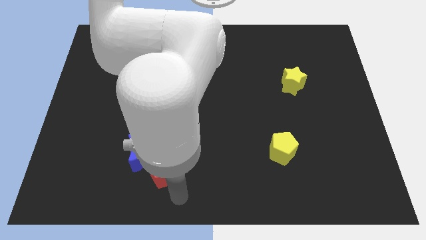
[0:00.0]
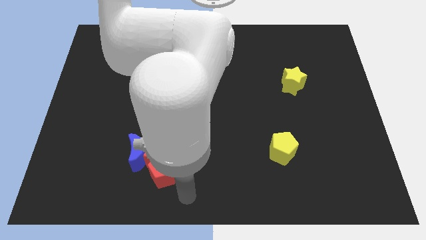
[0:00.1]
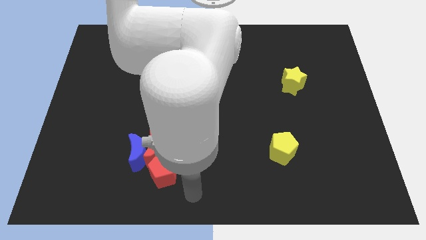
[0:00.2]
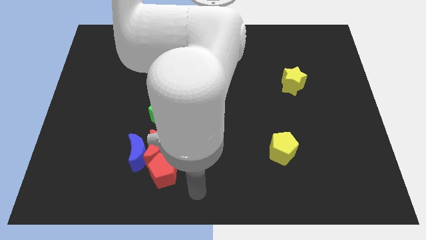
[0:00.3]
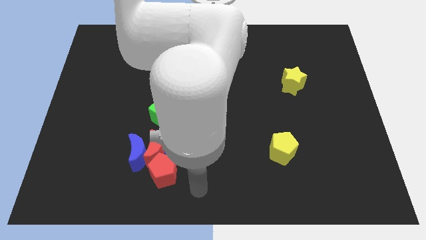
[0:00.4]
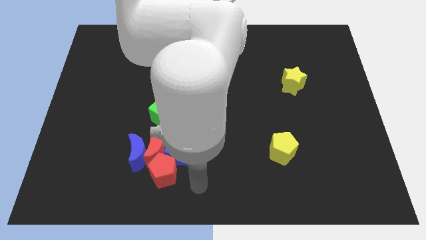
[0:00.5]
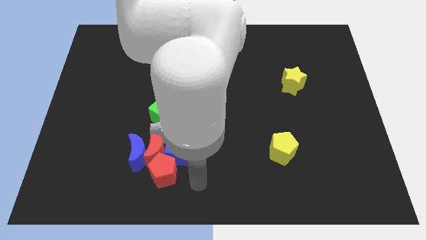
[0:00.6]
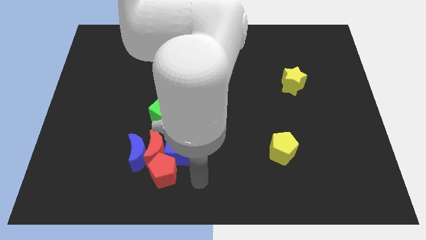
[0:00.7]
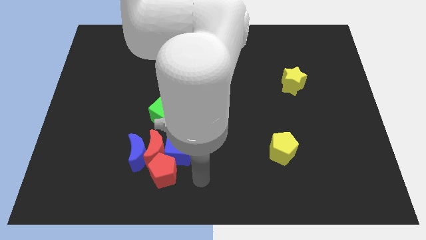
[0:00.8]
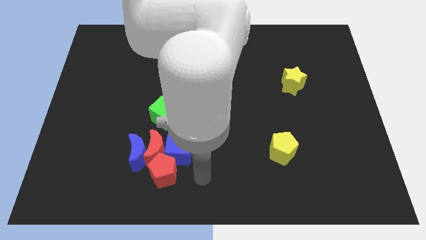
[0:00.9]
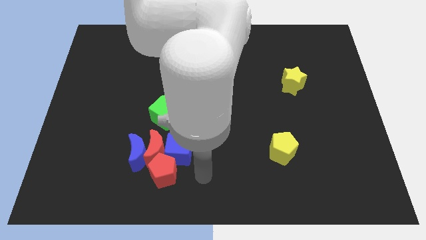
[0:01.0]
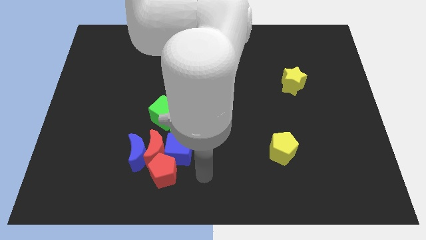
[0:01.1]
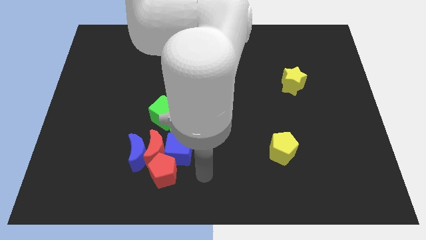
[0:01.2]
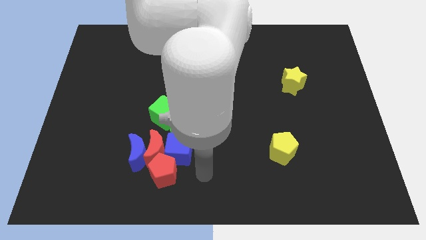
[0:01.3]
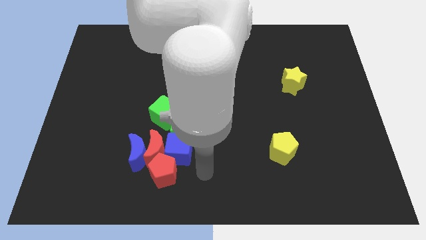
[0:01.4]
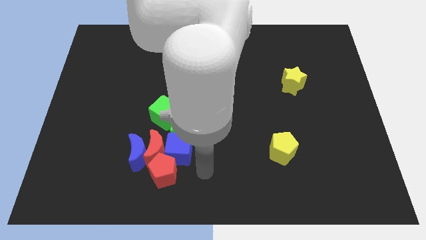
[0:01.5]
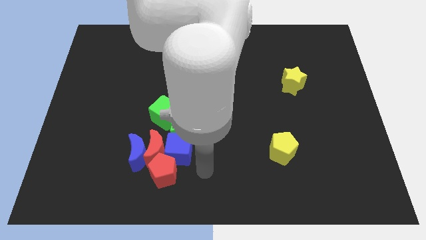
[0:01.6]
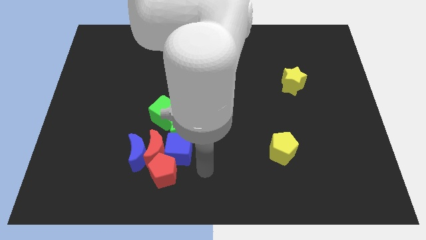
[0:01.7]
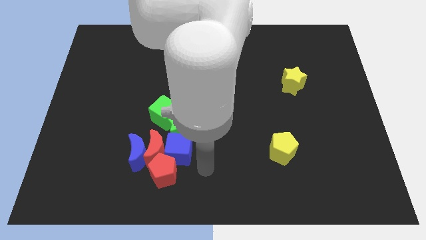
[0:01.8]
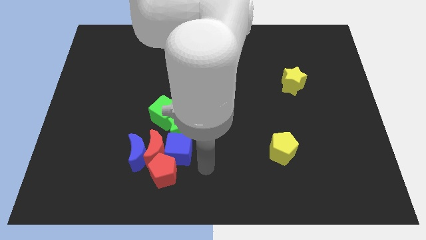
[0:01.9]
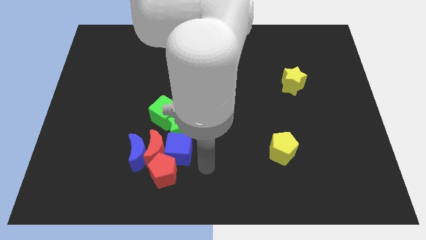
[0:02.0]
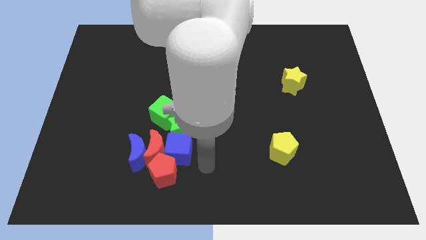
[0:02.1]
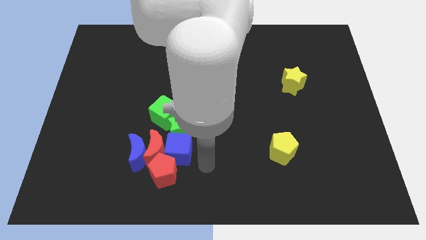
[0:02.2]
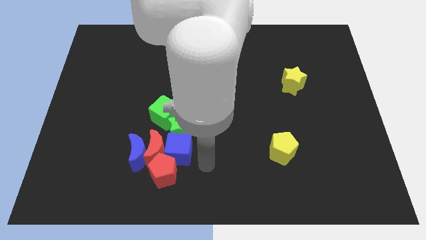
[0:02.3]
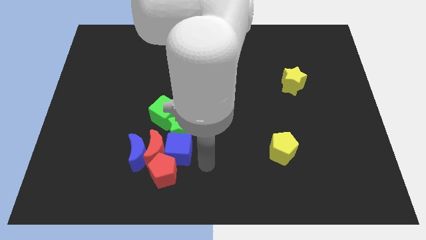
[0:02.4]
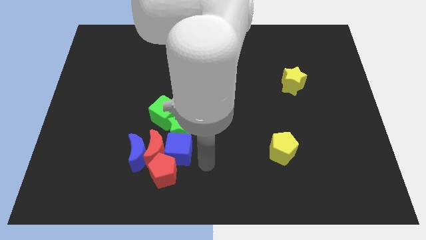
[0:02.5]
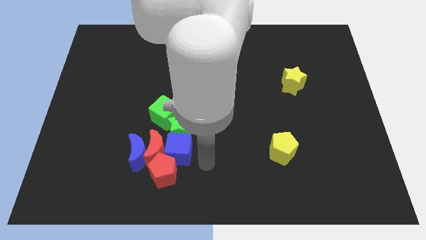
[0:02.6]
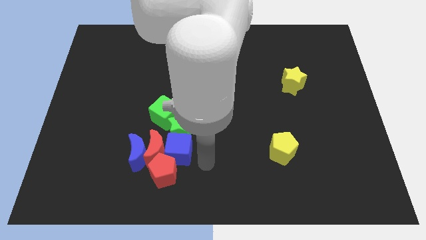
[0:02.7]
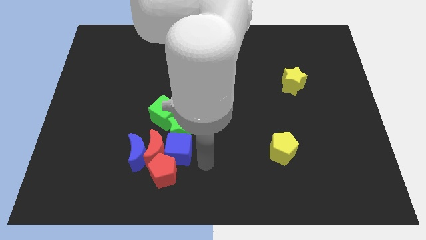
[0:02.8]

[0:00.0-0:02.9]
move the arm right to the blue cube

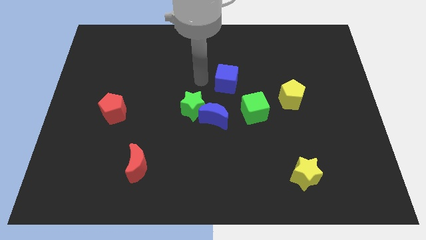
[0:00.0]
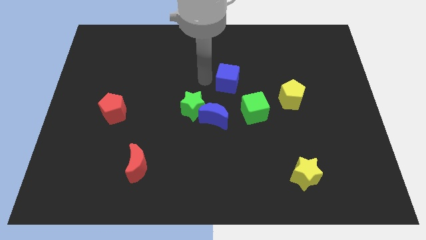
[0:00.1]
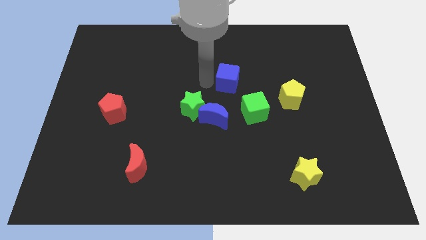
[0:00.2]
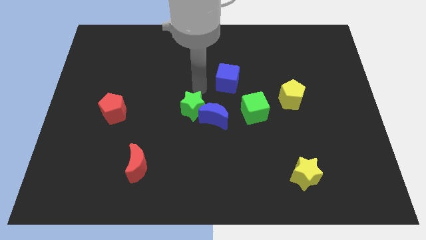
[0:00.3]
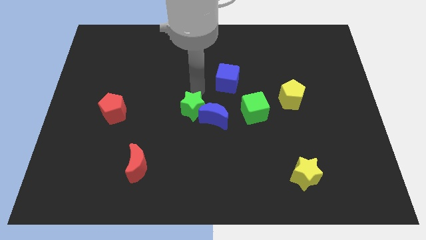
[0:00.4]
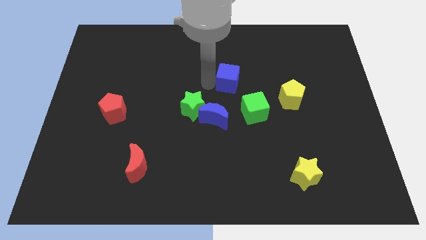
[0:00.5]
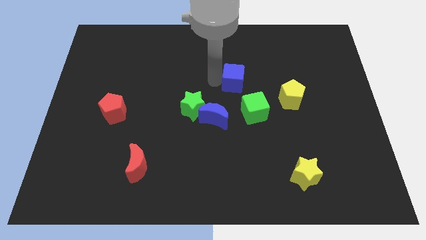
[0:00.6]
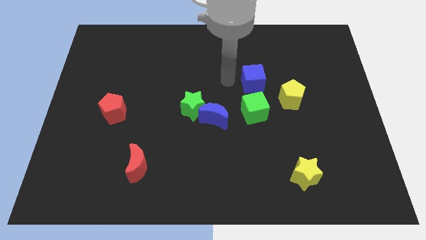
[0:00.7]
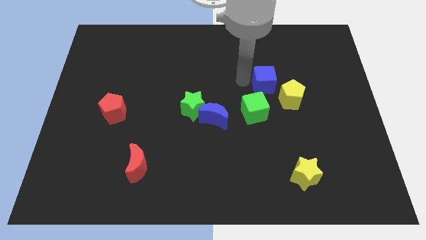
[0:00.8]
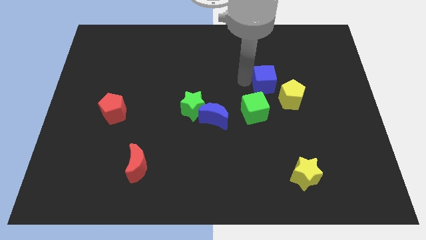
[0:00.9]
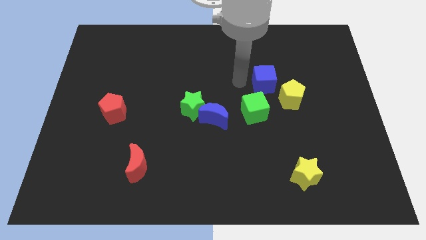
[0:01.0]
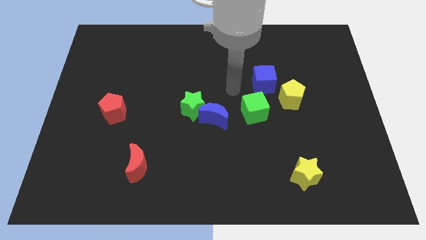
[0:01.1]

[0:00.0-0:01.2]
make a triangle out of yellow pentagon green and the blue cube

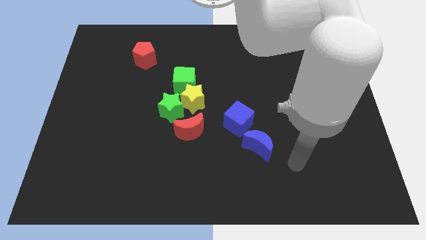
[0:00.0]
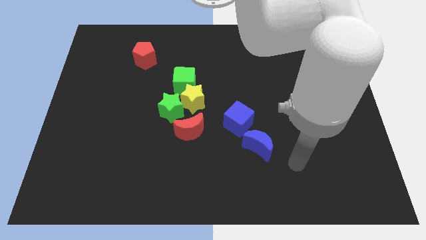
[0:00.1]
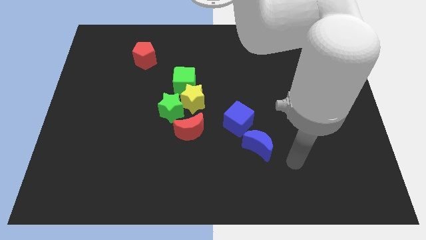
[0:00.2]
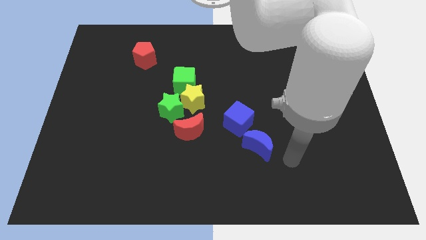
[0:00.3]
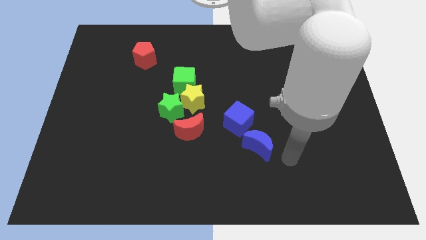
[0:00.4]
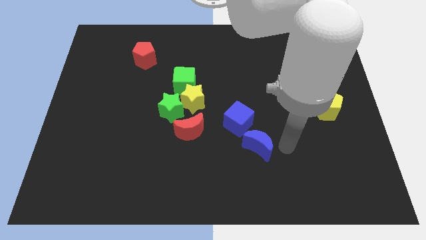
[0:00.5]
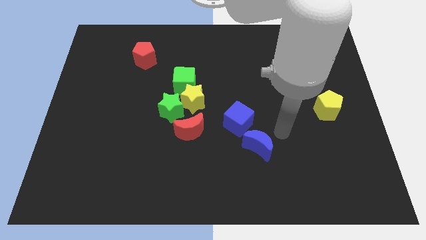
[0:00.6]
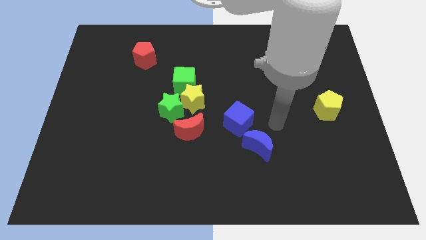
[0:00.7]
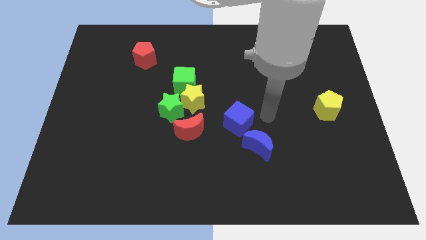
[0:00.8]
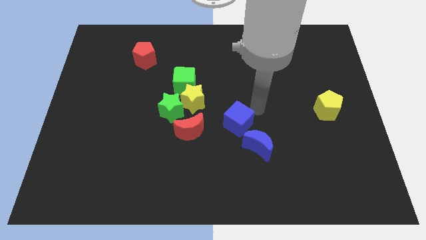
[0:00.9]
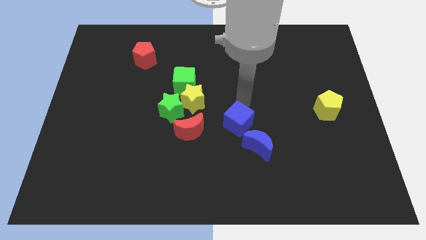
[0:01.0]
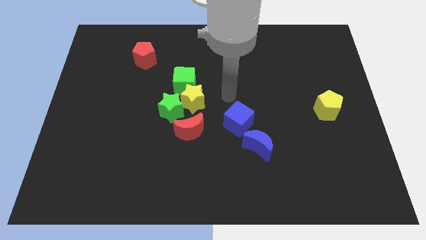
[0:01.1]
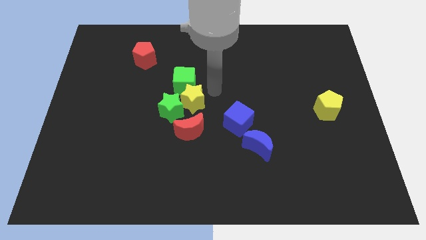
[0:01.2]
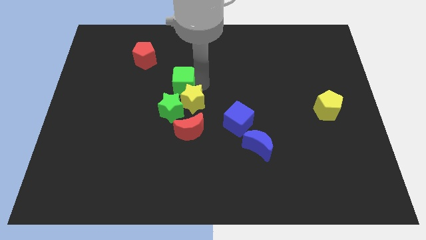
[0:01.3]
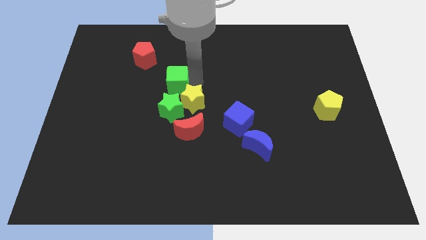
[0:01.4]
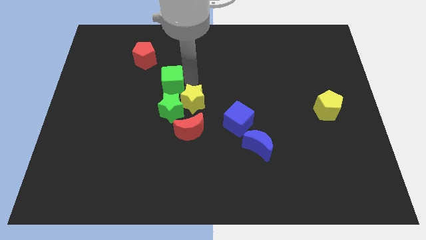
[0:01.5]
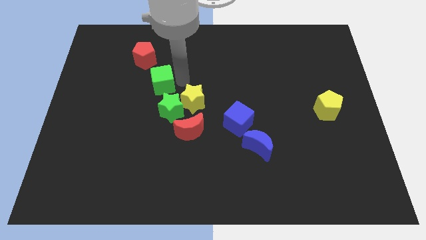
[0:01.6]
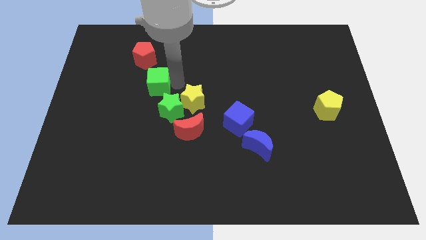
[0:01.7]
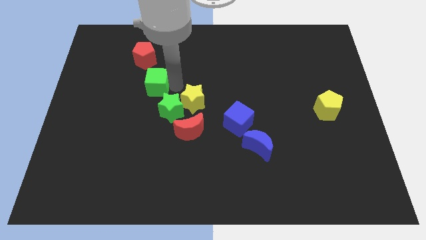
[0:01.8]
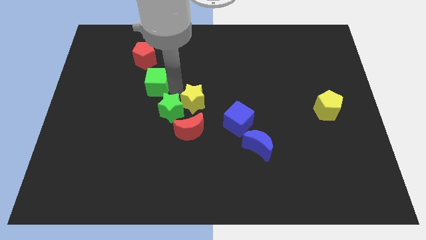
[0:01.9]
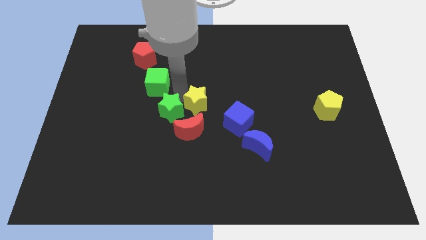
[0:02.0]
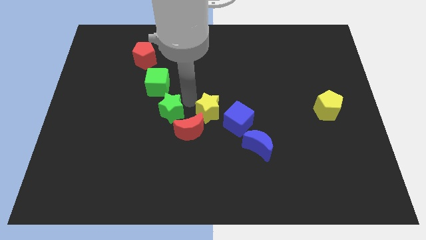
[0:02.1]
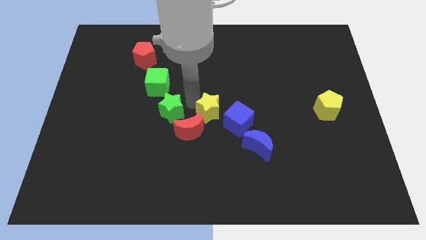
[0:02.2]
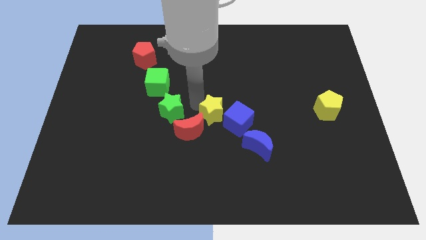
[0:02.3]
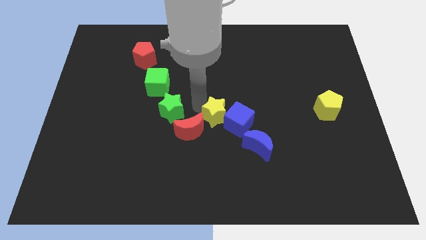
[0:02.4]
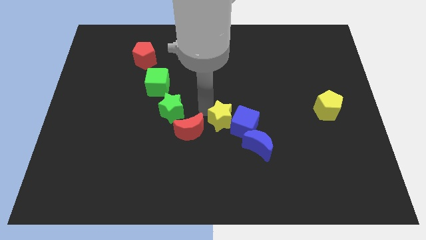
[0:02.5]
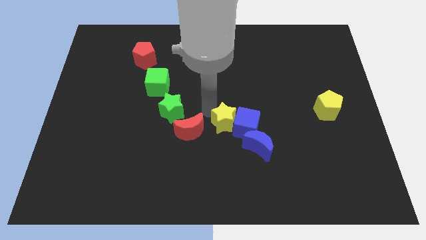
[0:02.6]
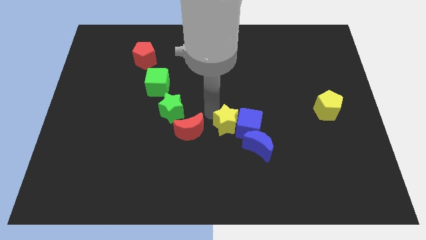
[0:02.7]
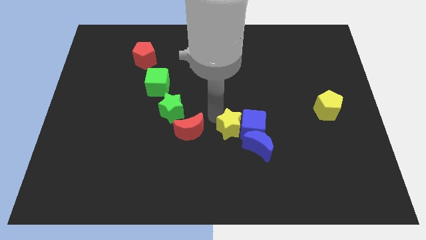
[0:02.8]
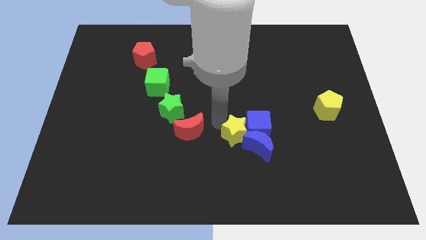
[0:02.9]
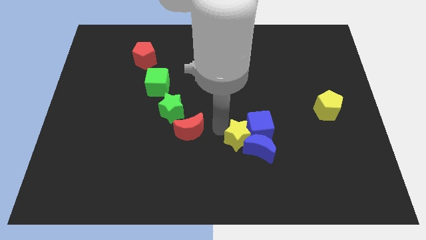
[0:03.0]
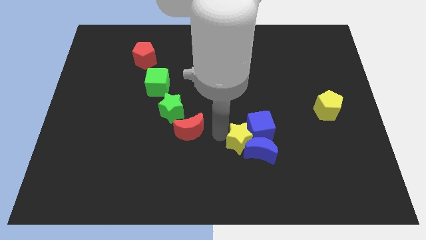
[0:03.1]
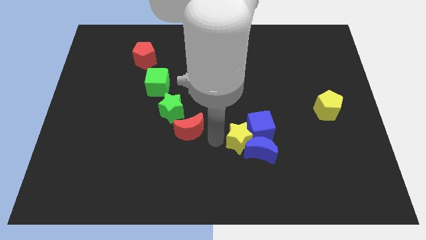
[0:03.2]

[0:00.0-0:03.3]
move the green cube below the red pentagon

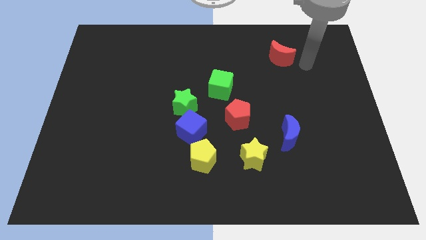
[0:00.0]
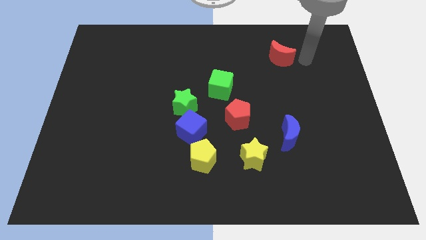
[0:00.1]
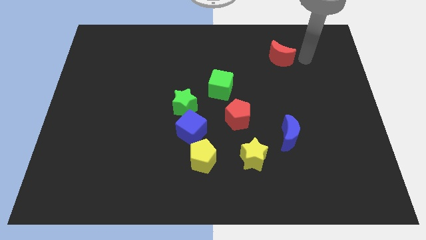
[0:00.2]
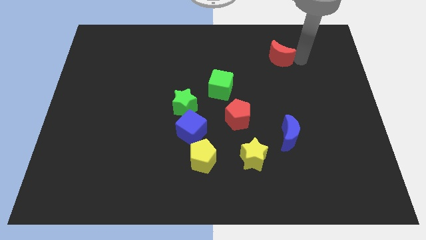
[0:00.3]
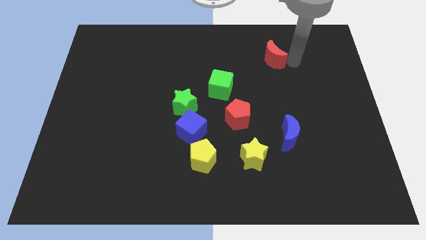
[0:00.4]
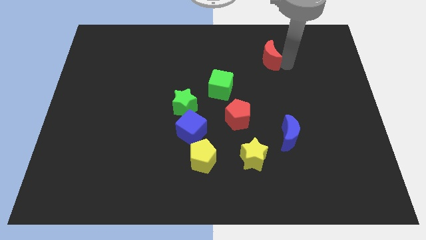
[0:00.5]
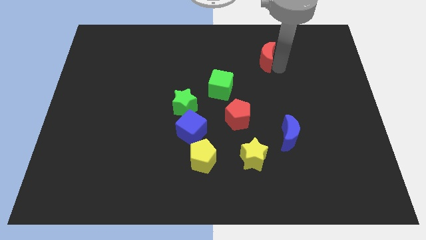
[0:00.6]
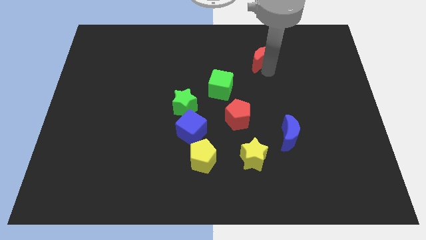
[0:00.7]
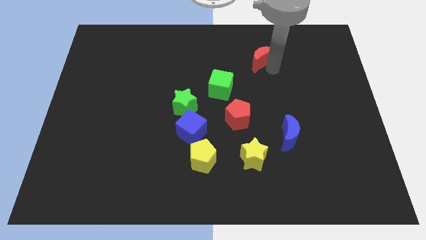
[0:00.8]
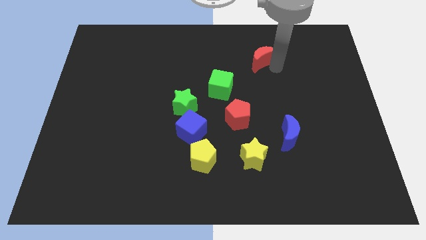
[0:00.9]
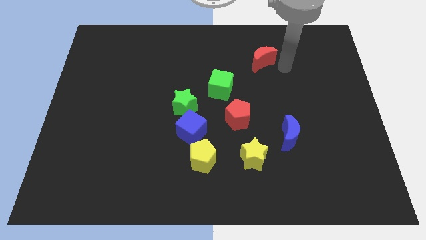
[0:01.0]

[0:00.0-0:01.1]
push the red crescent towards the green cube

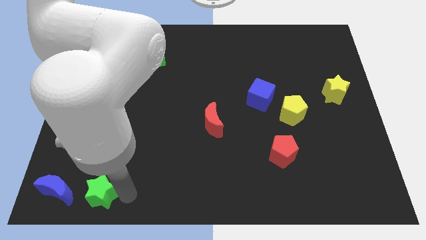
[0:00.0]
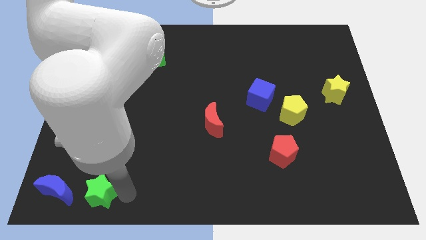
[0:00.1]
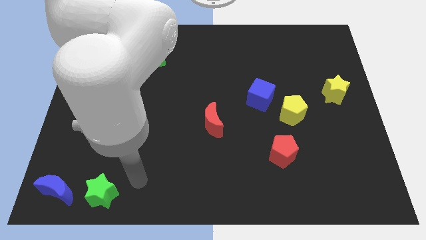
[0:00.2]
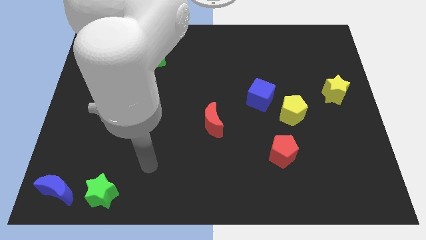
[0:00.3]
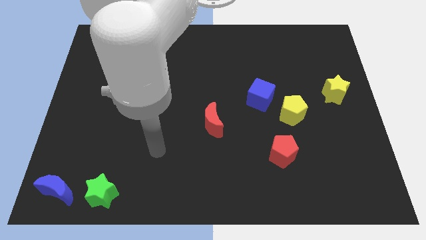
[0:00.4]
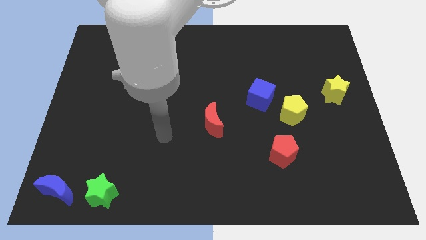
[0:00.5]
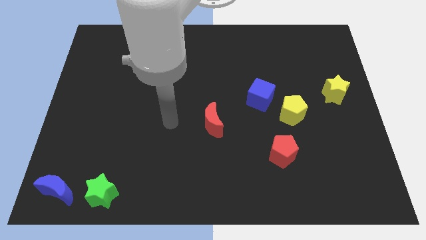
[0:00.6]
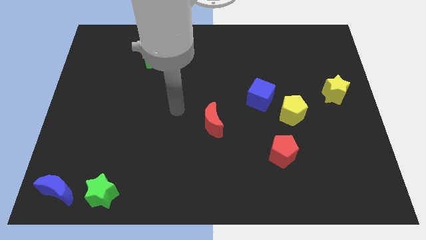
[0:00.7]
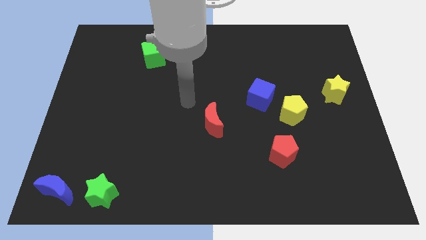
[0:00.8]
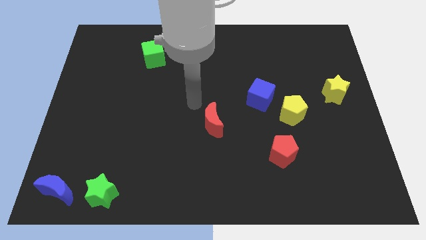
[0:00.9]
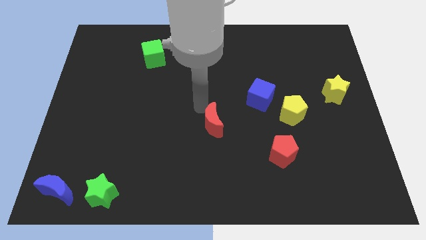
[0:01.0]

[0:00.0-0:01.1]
move your arm away from the green star
